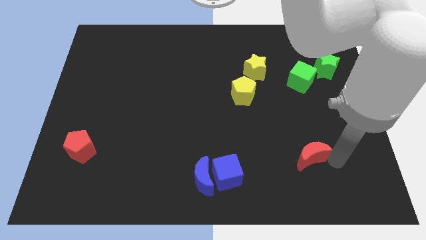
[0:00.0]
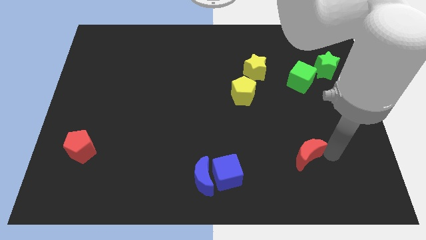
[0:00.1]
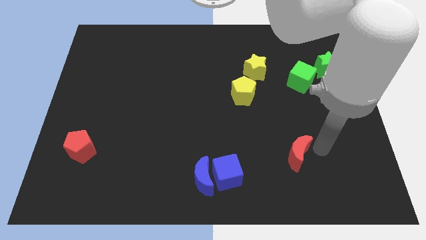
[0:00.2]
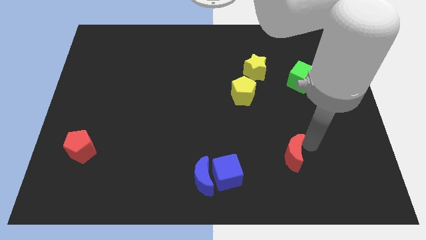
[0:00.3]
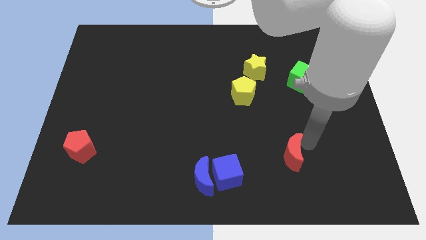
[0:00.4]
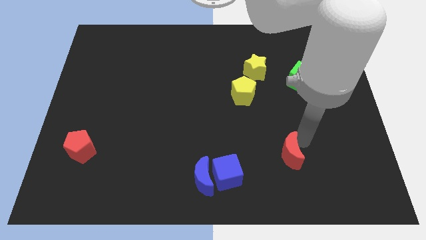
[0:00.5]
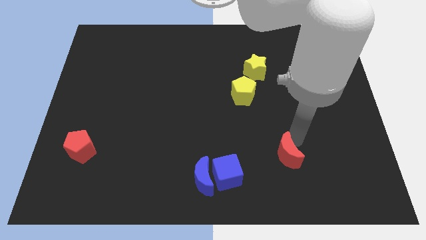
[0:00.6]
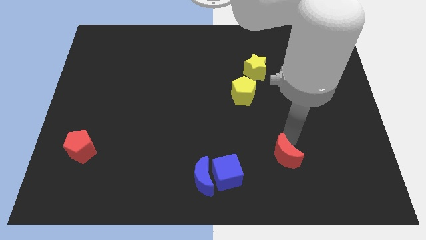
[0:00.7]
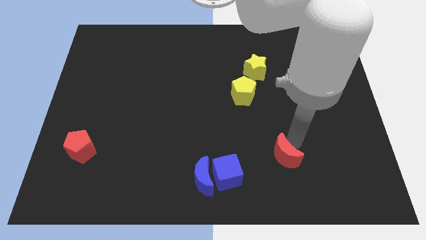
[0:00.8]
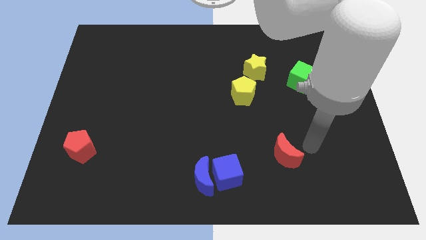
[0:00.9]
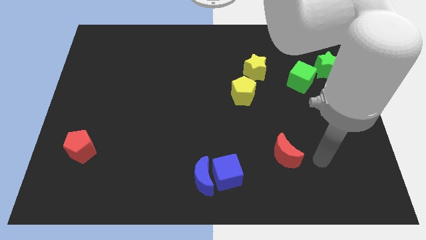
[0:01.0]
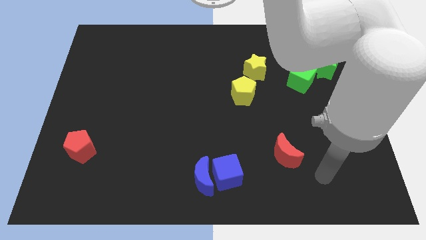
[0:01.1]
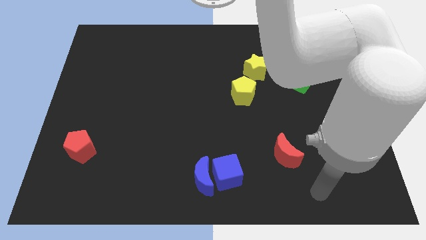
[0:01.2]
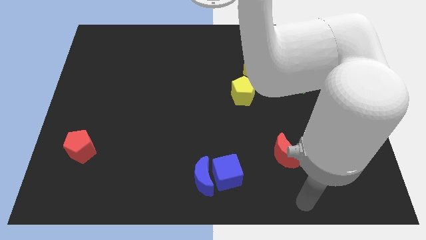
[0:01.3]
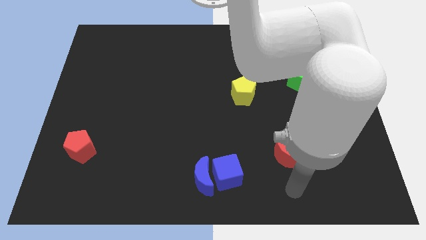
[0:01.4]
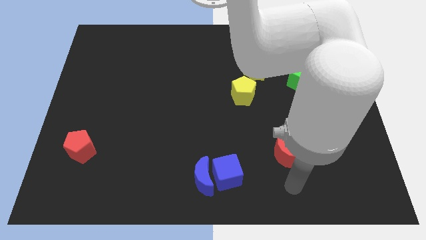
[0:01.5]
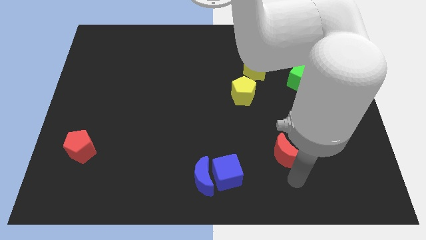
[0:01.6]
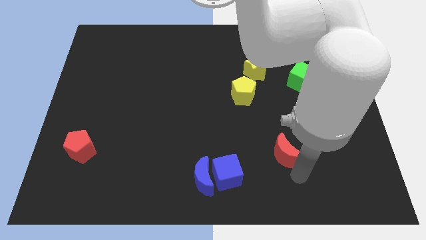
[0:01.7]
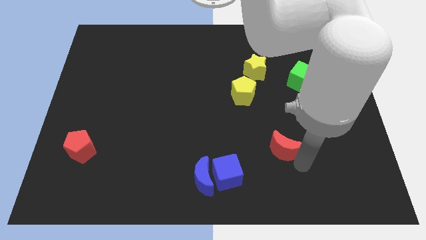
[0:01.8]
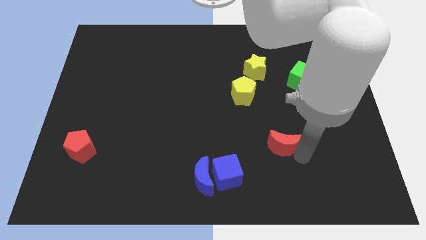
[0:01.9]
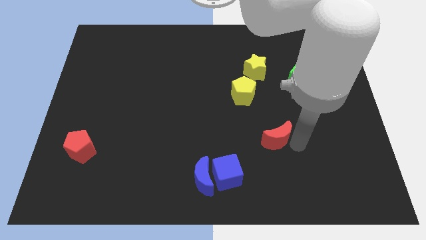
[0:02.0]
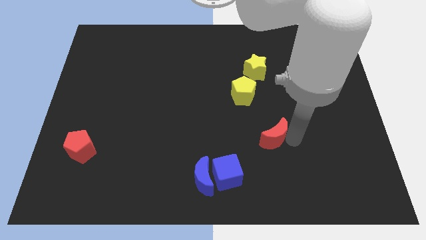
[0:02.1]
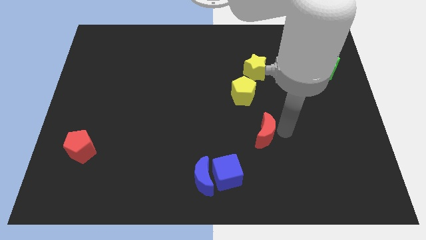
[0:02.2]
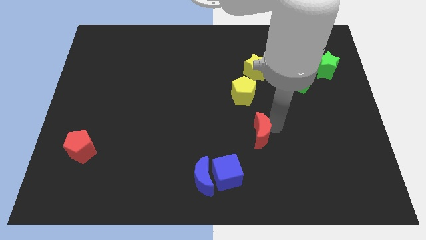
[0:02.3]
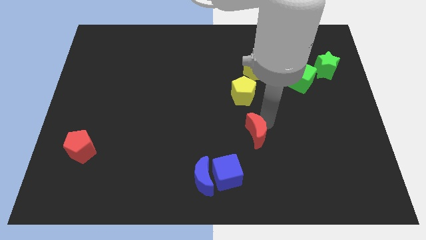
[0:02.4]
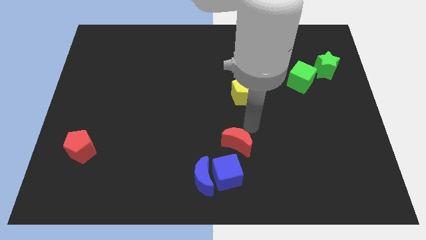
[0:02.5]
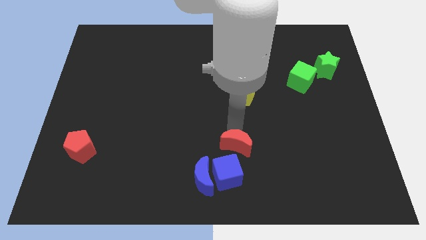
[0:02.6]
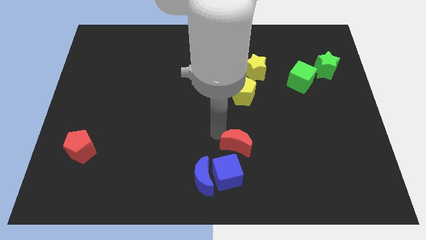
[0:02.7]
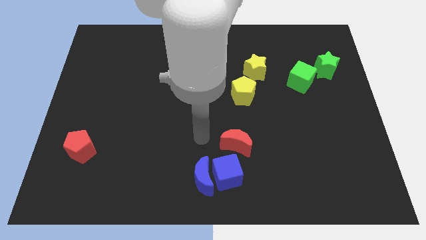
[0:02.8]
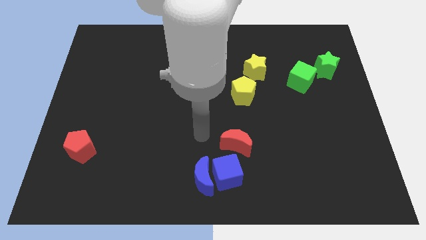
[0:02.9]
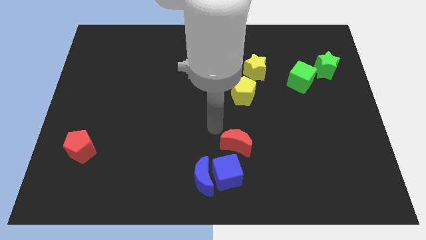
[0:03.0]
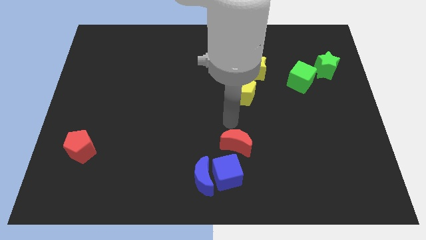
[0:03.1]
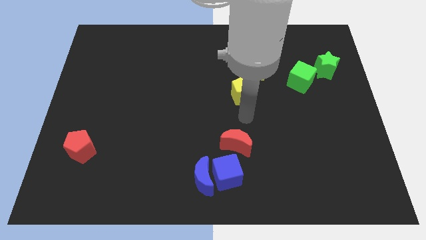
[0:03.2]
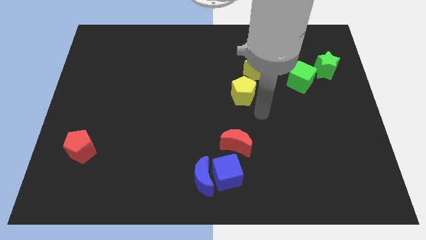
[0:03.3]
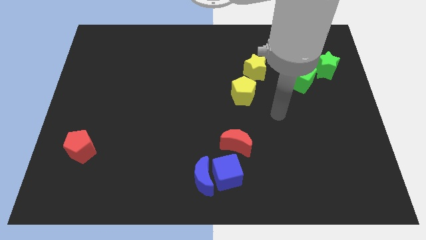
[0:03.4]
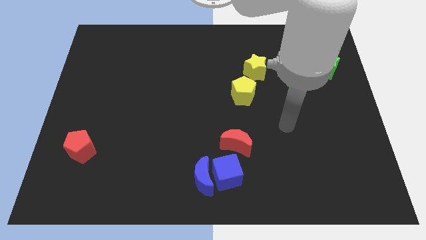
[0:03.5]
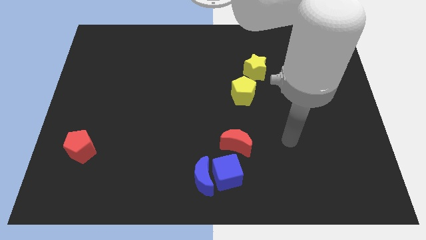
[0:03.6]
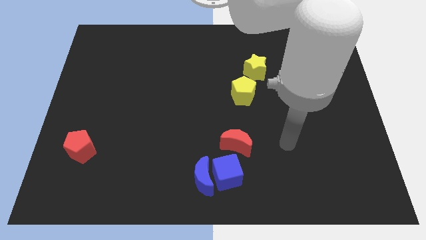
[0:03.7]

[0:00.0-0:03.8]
push red moon near blue blocks

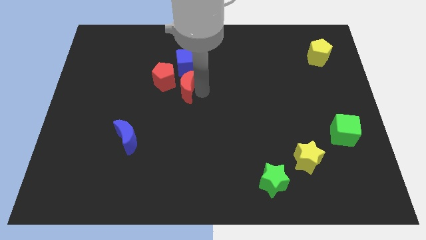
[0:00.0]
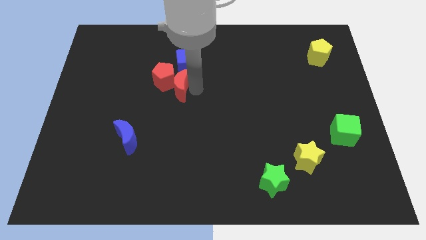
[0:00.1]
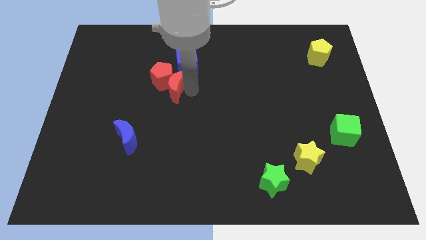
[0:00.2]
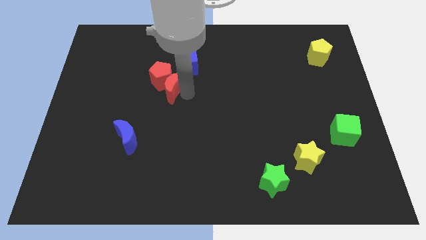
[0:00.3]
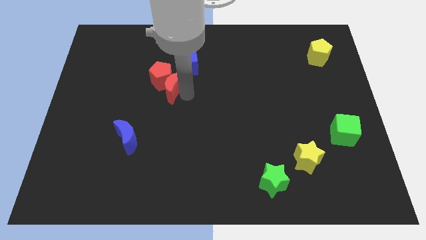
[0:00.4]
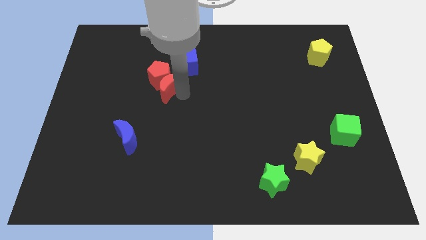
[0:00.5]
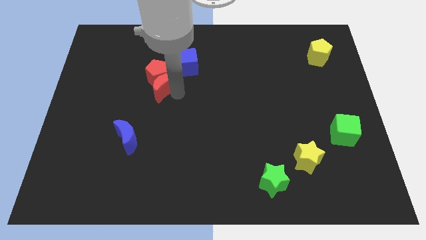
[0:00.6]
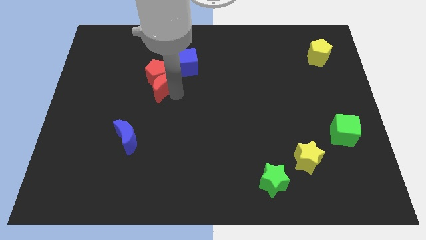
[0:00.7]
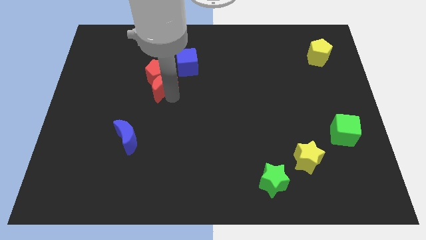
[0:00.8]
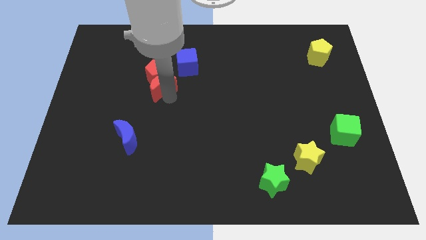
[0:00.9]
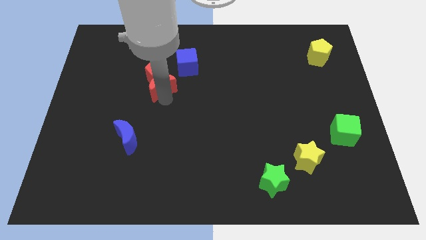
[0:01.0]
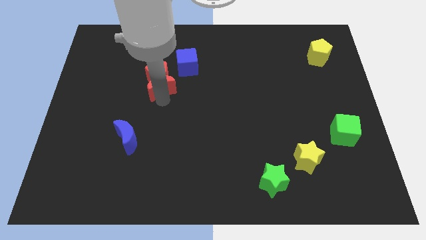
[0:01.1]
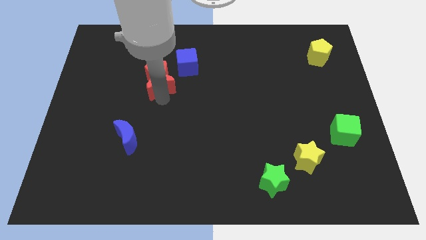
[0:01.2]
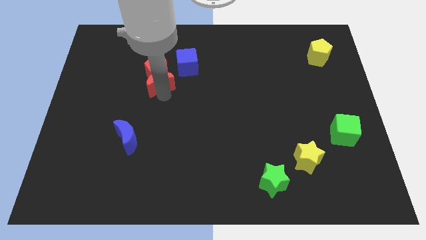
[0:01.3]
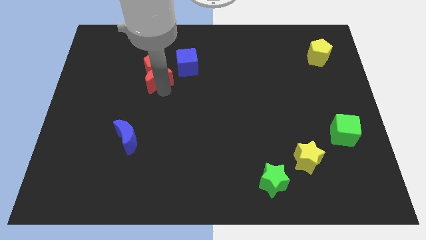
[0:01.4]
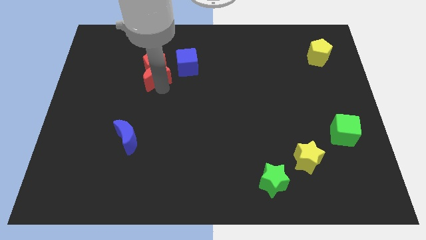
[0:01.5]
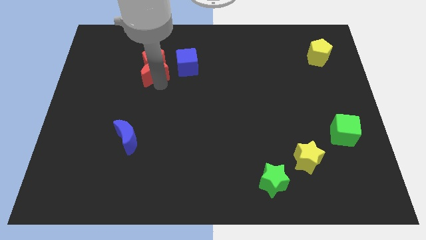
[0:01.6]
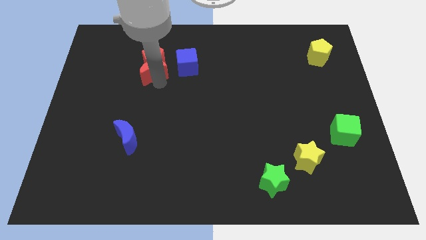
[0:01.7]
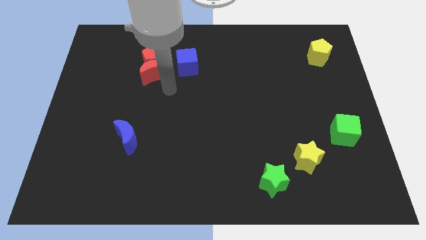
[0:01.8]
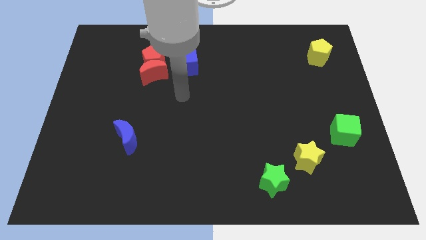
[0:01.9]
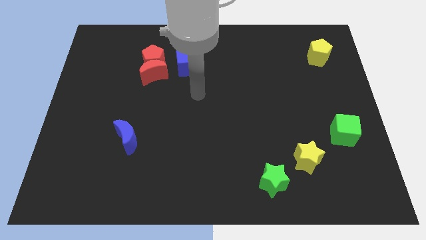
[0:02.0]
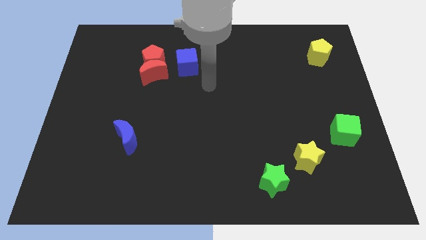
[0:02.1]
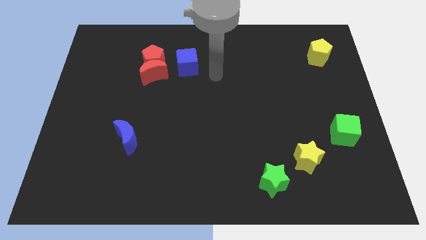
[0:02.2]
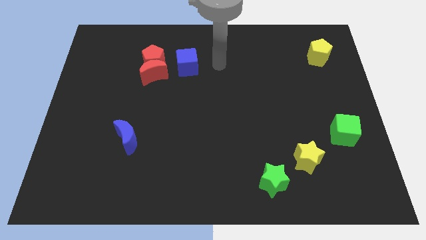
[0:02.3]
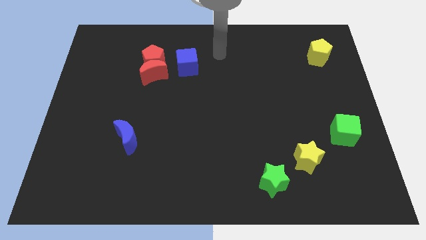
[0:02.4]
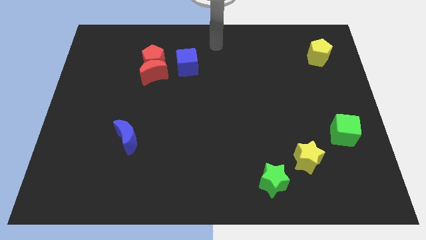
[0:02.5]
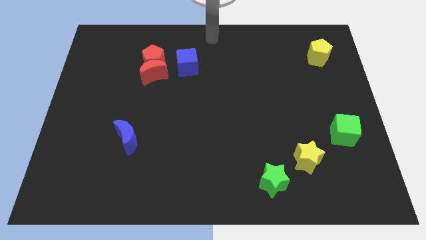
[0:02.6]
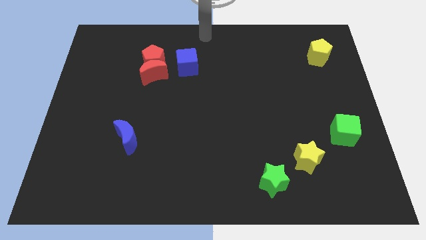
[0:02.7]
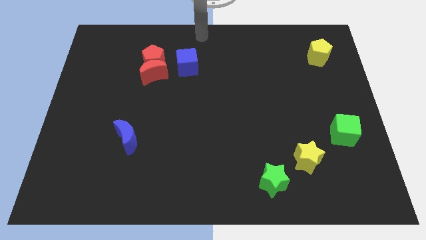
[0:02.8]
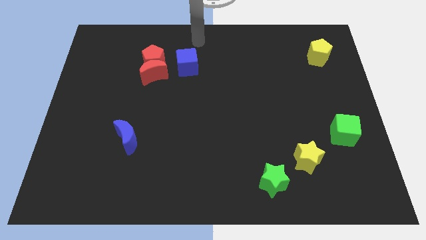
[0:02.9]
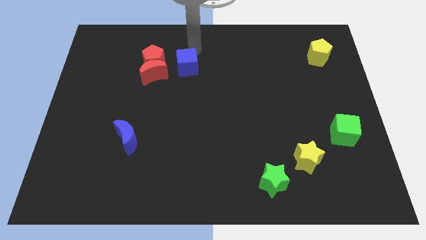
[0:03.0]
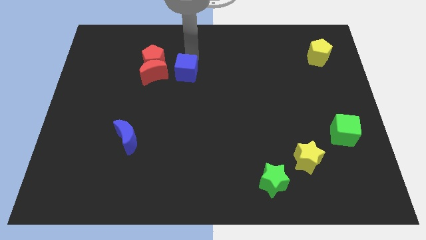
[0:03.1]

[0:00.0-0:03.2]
slide red crescent and the red pentagon towards top left

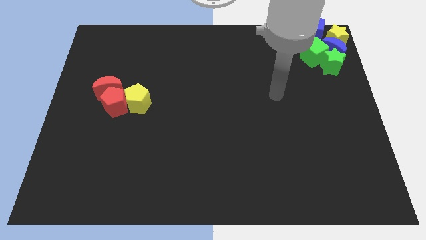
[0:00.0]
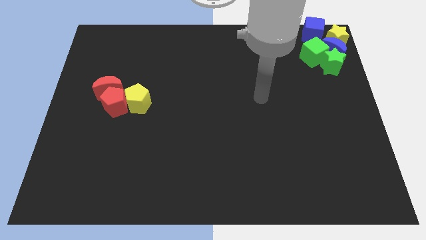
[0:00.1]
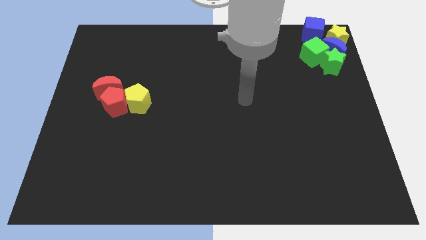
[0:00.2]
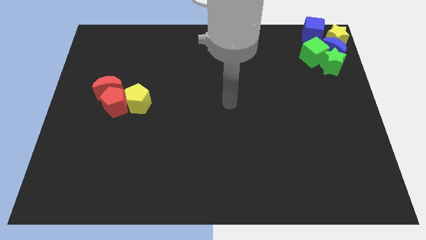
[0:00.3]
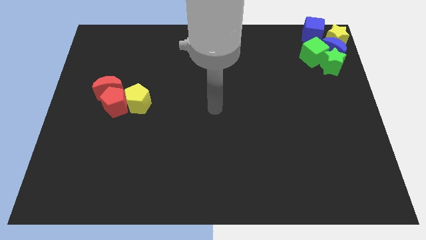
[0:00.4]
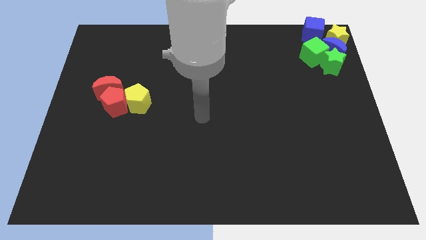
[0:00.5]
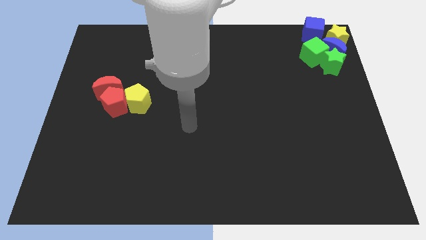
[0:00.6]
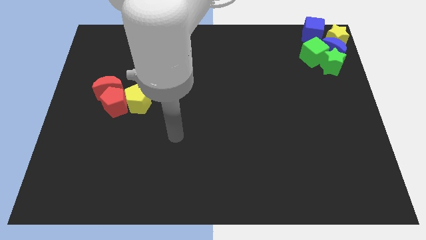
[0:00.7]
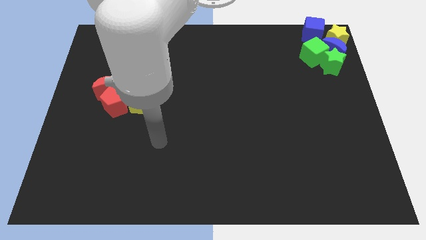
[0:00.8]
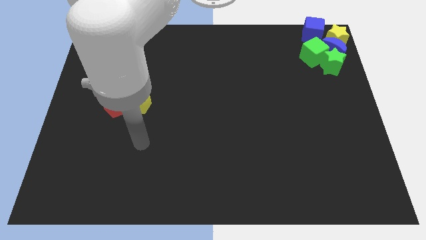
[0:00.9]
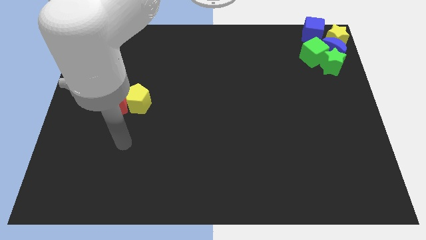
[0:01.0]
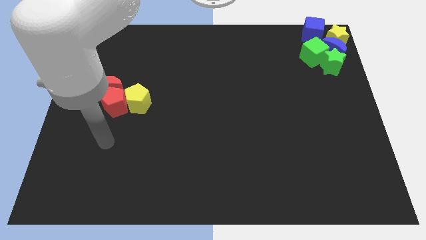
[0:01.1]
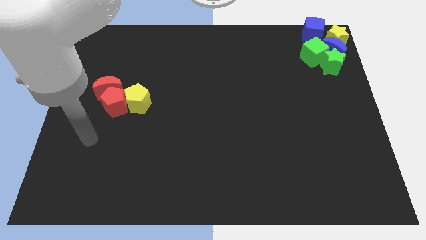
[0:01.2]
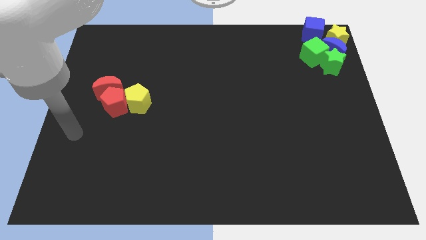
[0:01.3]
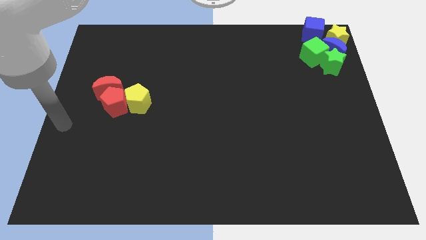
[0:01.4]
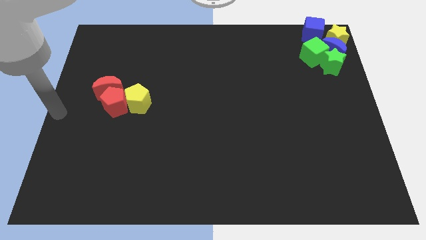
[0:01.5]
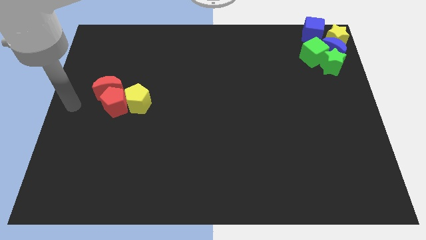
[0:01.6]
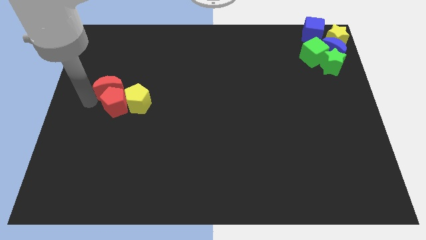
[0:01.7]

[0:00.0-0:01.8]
move yourself to the left side of the group of red blocks
